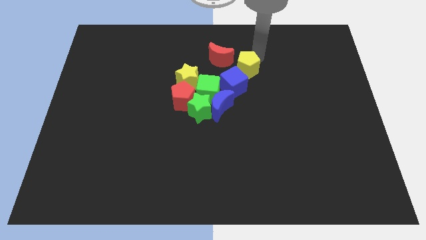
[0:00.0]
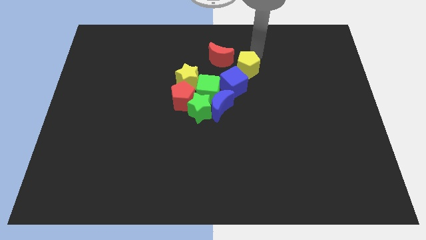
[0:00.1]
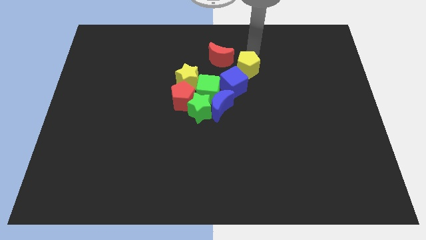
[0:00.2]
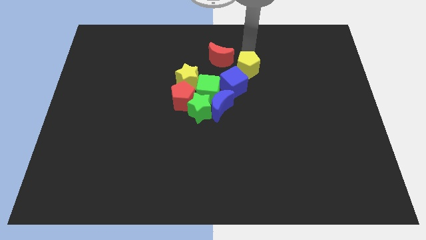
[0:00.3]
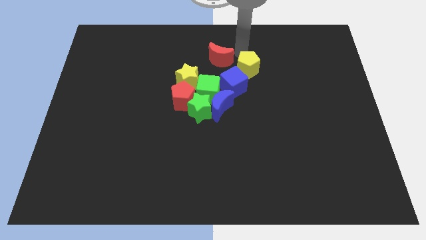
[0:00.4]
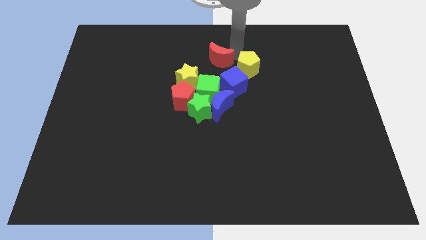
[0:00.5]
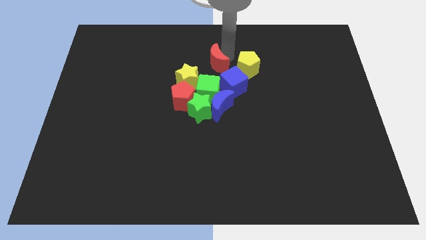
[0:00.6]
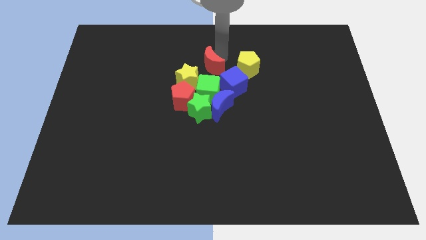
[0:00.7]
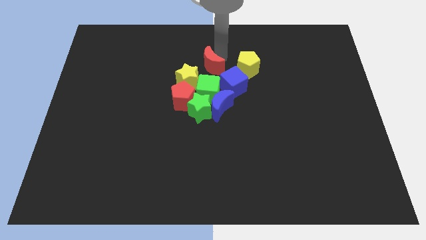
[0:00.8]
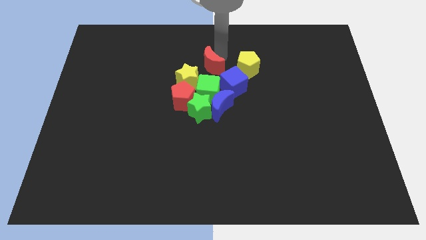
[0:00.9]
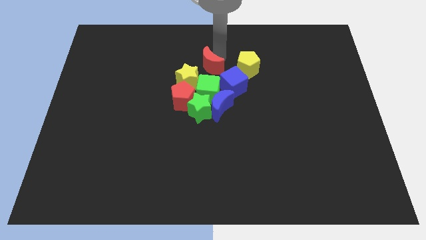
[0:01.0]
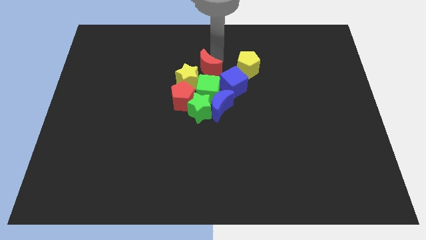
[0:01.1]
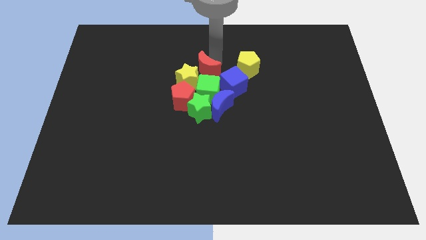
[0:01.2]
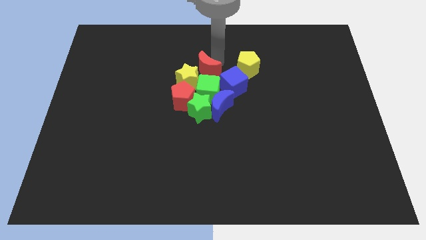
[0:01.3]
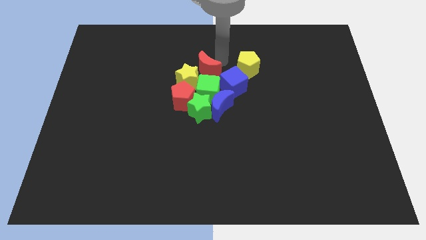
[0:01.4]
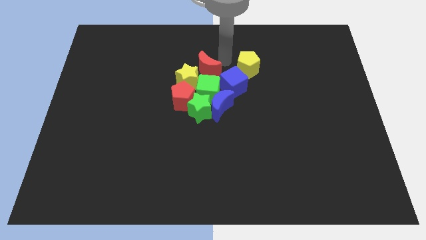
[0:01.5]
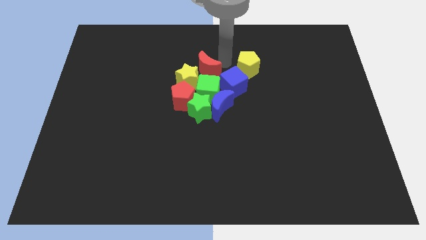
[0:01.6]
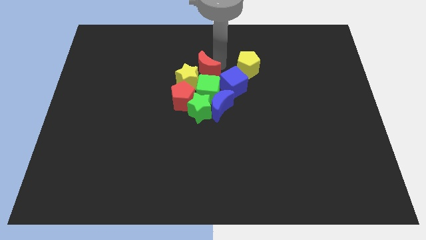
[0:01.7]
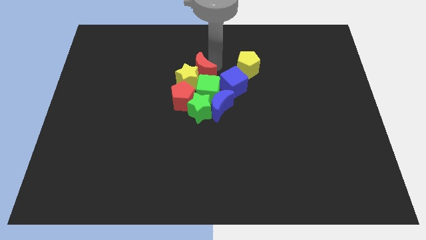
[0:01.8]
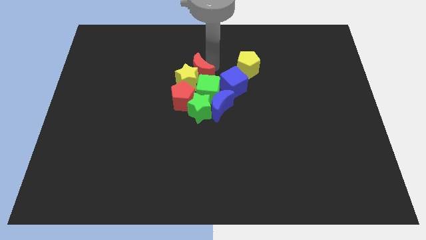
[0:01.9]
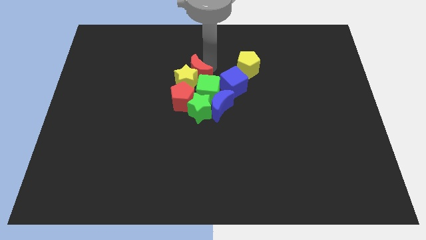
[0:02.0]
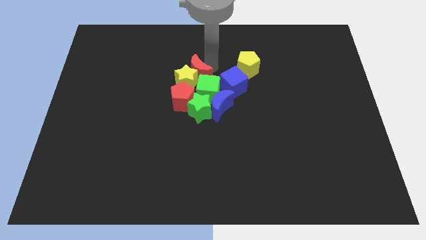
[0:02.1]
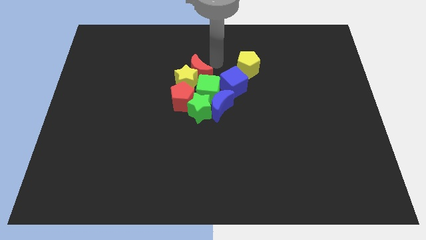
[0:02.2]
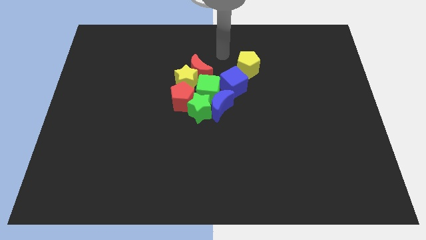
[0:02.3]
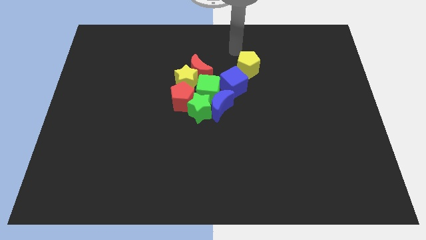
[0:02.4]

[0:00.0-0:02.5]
push the red crescent into the group of blocks

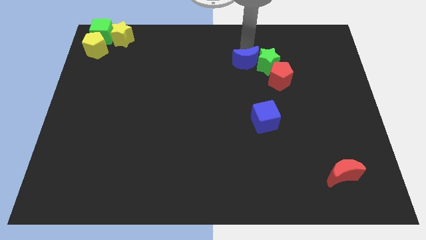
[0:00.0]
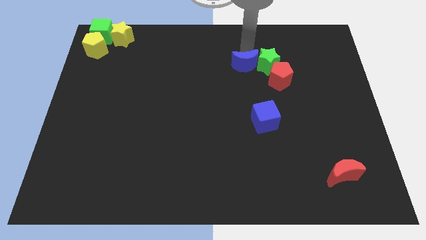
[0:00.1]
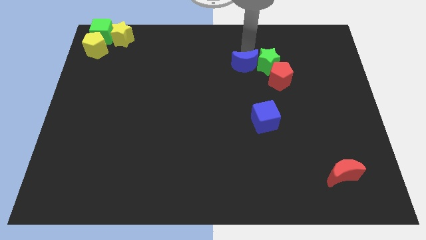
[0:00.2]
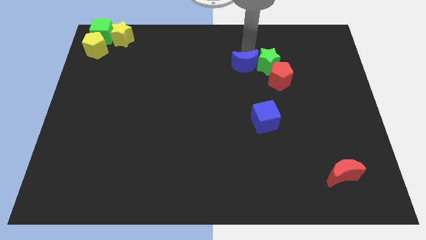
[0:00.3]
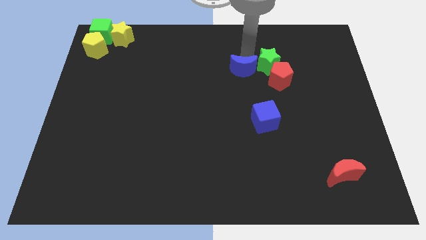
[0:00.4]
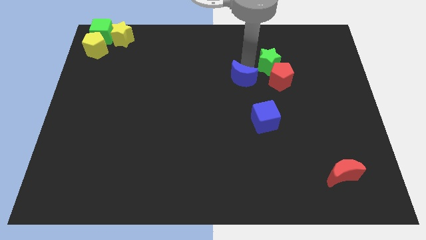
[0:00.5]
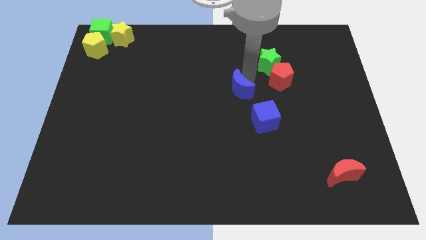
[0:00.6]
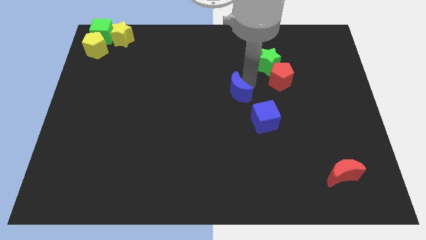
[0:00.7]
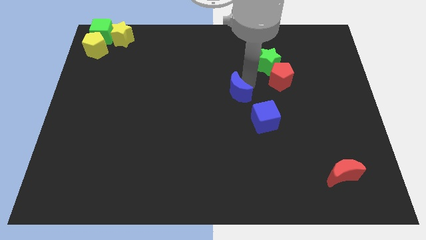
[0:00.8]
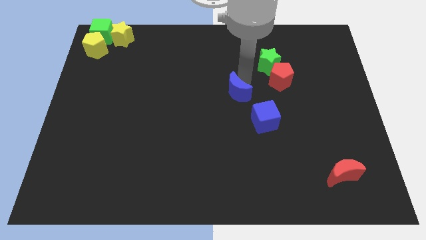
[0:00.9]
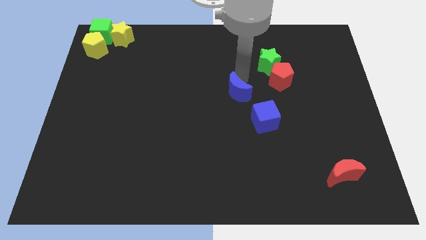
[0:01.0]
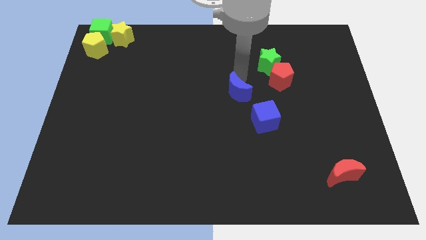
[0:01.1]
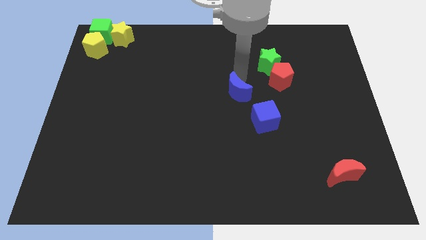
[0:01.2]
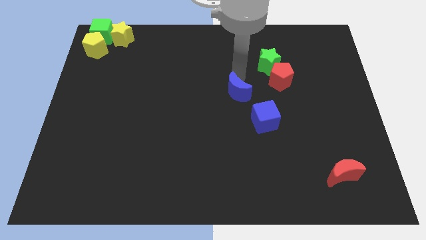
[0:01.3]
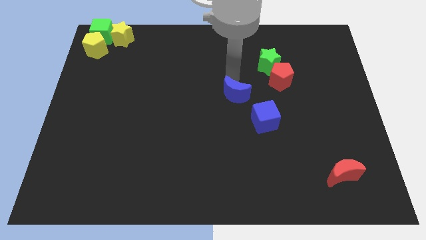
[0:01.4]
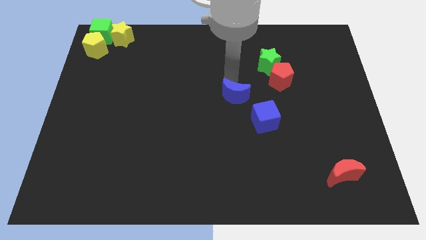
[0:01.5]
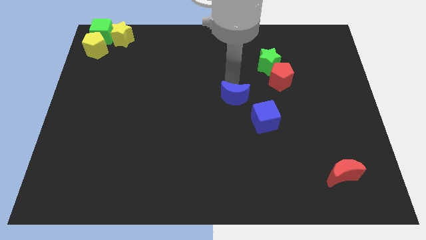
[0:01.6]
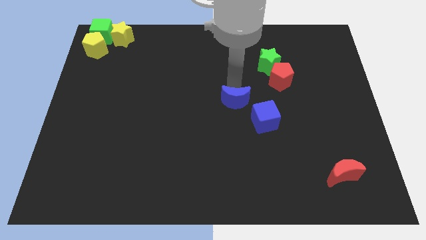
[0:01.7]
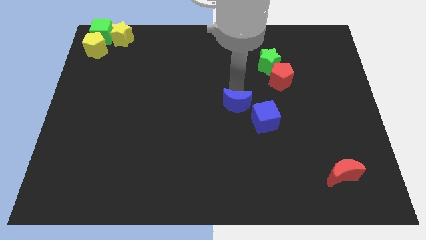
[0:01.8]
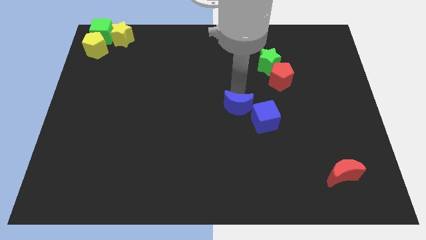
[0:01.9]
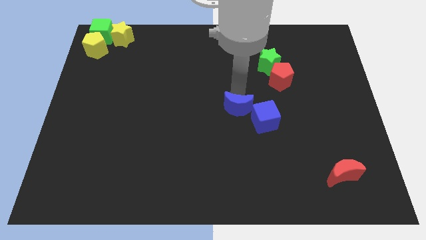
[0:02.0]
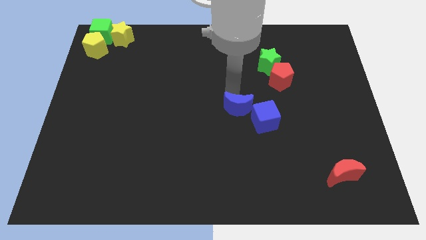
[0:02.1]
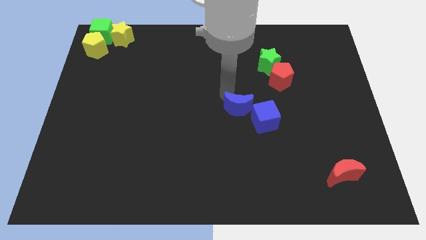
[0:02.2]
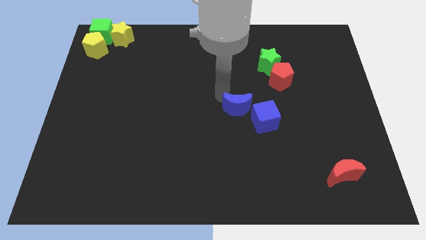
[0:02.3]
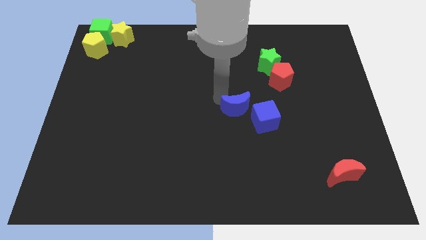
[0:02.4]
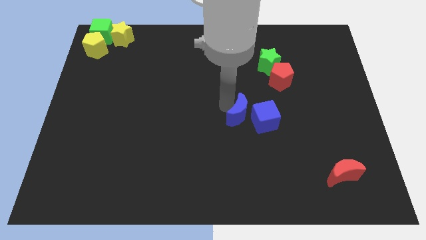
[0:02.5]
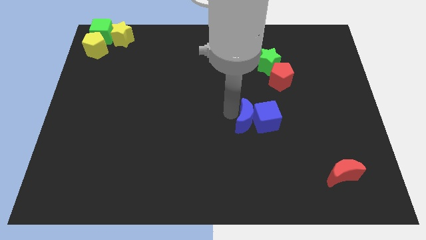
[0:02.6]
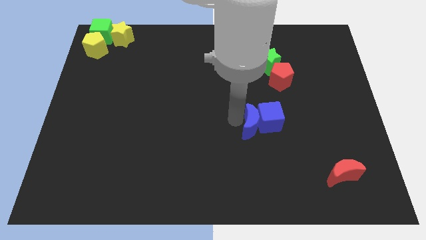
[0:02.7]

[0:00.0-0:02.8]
push blue crescent beside blue cube

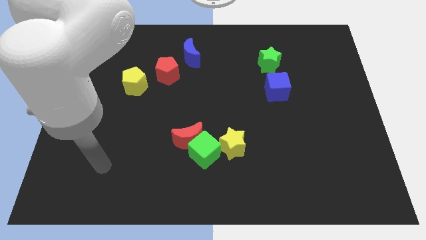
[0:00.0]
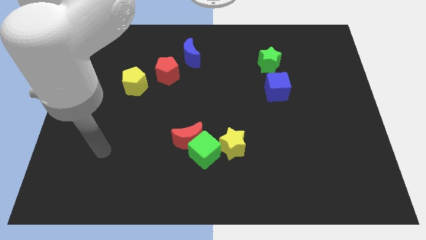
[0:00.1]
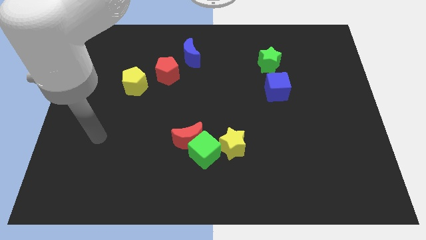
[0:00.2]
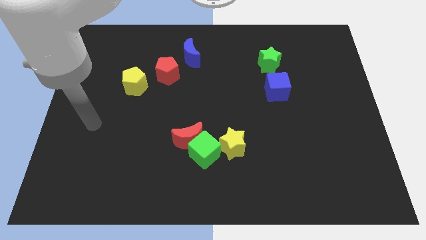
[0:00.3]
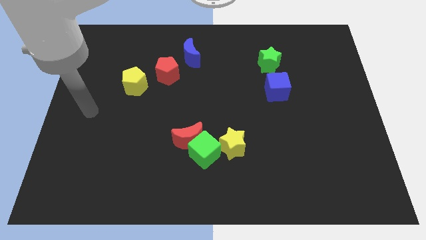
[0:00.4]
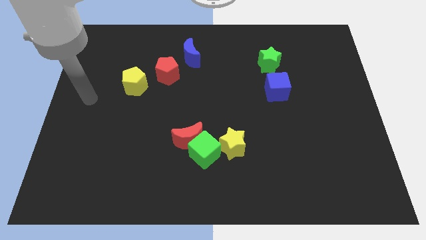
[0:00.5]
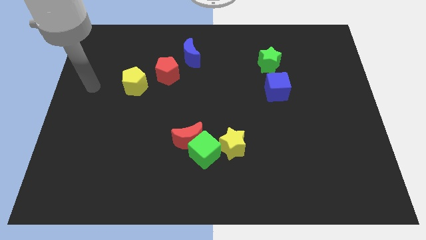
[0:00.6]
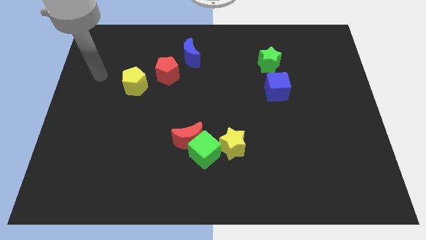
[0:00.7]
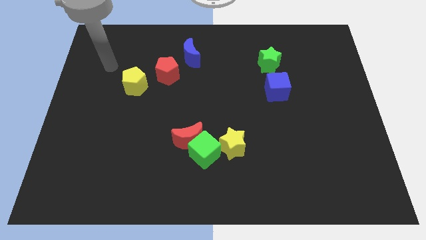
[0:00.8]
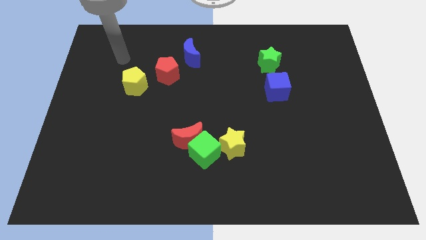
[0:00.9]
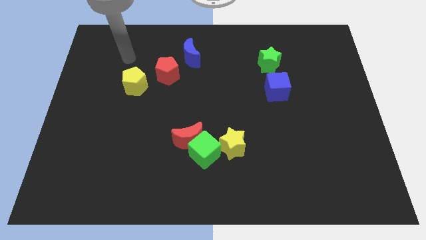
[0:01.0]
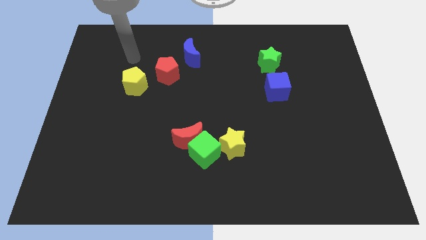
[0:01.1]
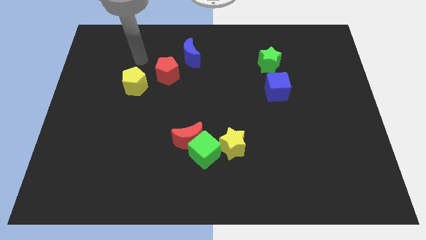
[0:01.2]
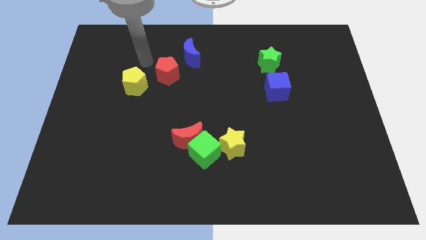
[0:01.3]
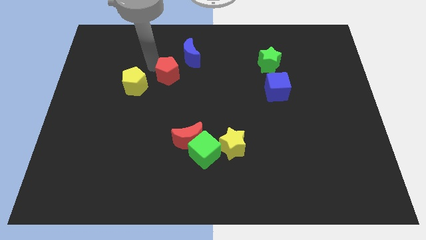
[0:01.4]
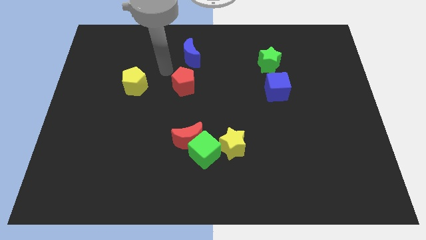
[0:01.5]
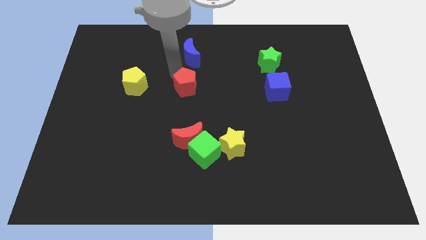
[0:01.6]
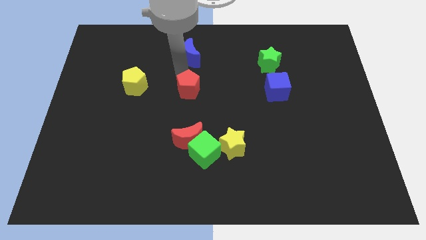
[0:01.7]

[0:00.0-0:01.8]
move the red pentagon towards the bottom side of the blue crescent

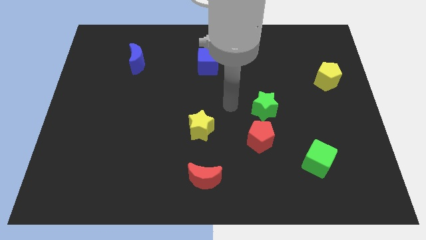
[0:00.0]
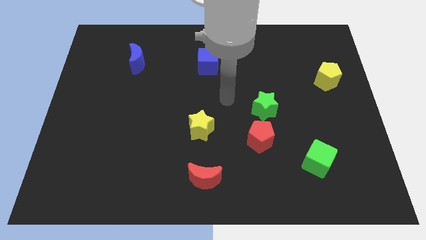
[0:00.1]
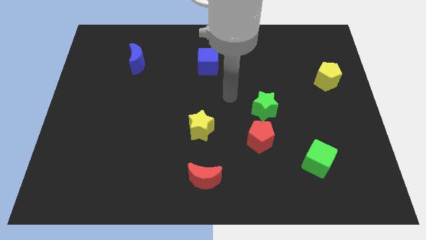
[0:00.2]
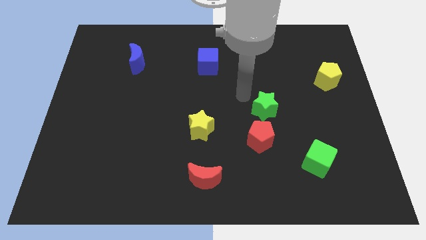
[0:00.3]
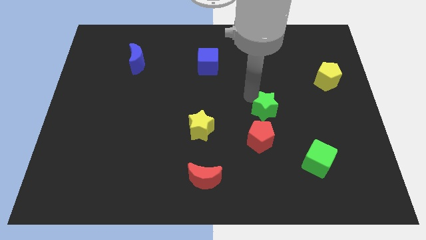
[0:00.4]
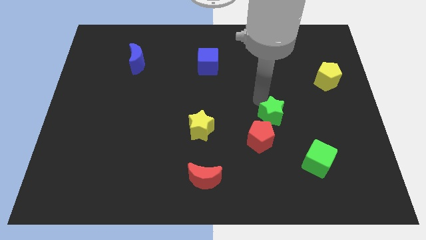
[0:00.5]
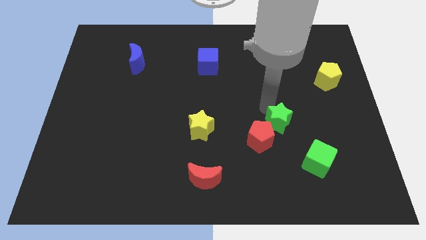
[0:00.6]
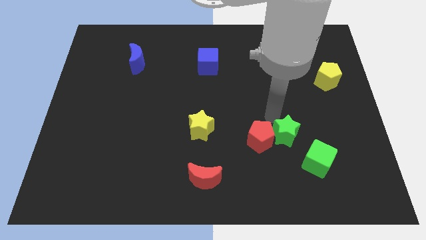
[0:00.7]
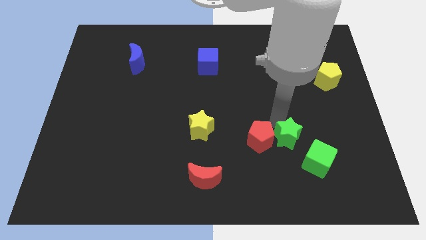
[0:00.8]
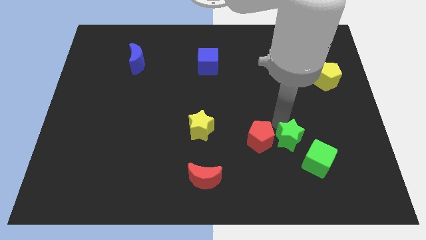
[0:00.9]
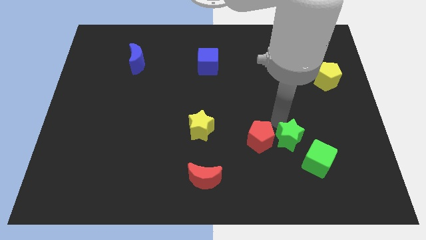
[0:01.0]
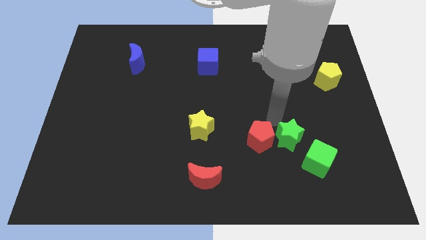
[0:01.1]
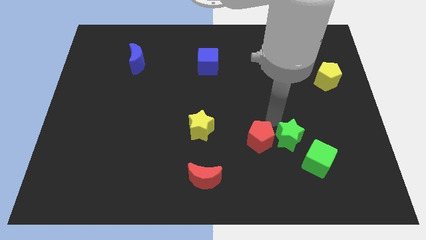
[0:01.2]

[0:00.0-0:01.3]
place the green star in between the red pentagon and the green cube

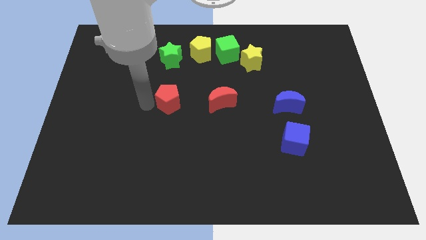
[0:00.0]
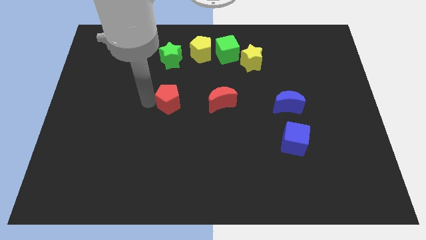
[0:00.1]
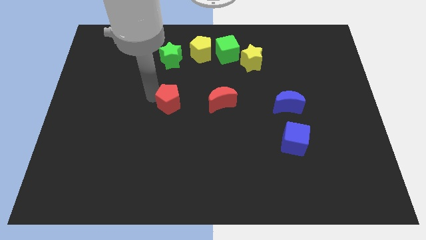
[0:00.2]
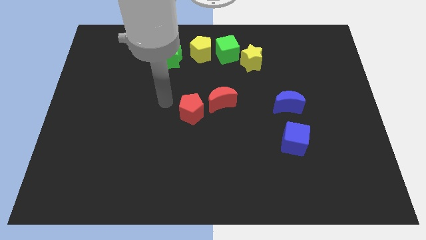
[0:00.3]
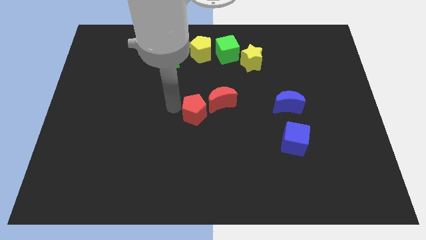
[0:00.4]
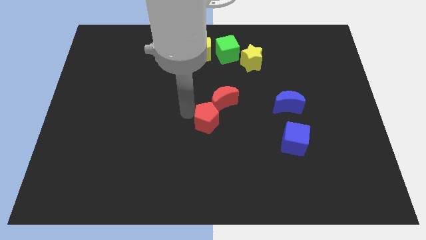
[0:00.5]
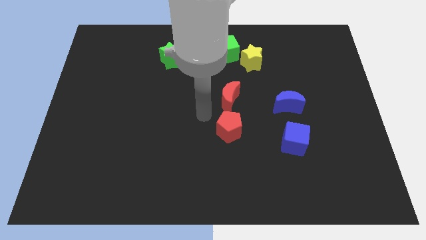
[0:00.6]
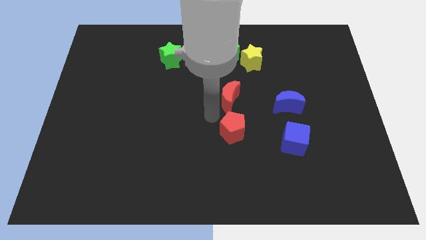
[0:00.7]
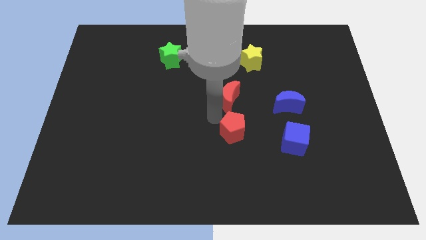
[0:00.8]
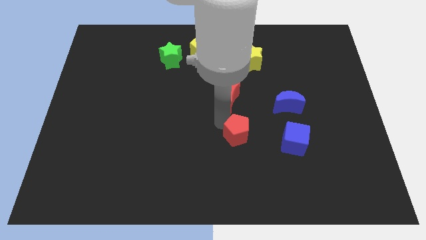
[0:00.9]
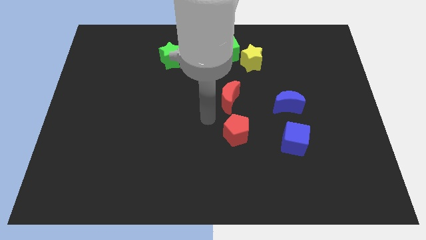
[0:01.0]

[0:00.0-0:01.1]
move the red pentagon to the bottom of the red crescent
